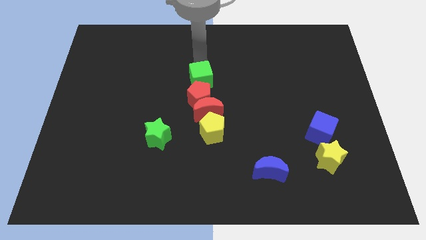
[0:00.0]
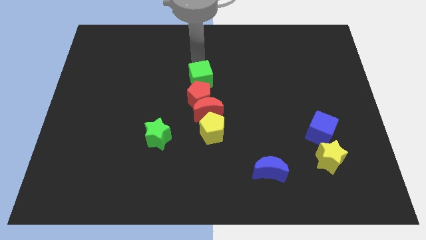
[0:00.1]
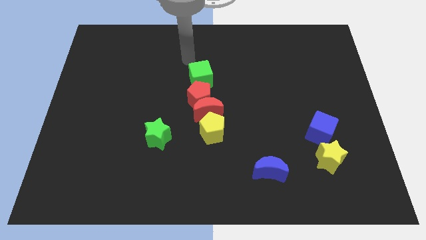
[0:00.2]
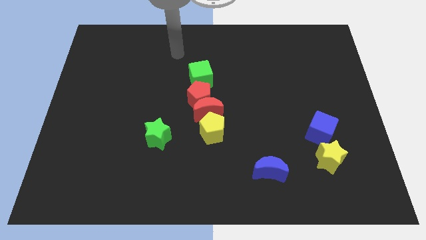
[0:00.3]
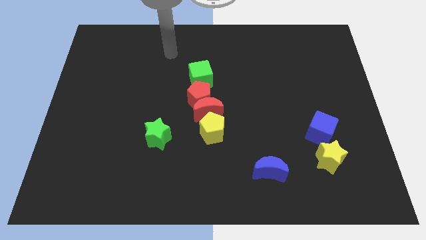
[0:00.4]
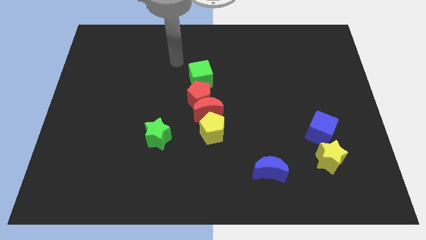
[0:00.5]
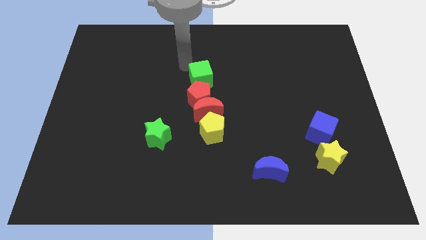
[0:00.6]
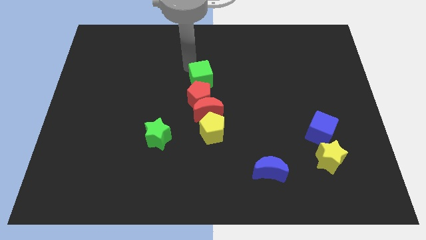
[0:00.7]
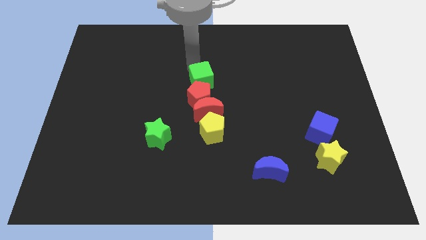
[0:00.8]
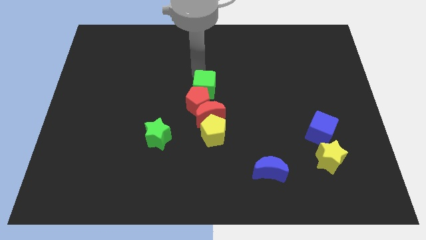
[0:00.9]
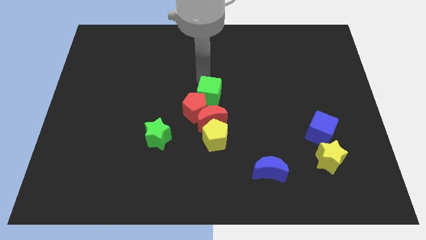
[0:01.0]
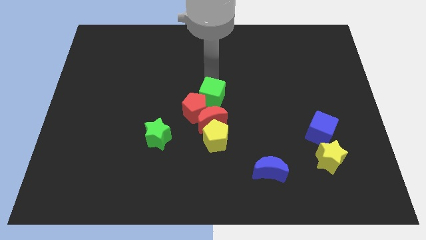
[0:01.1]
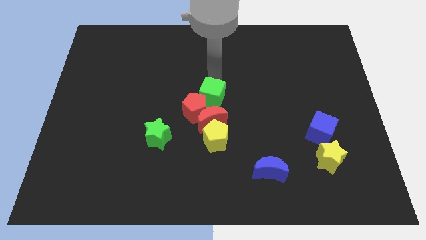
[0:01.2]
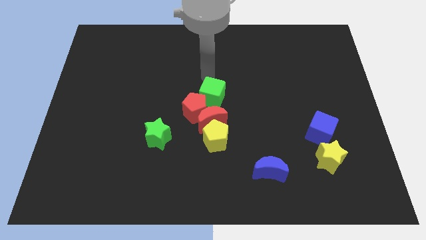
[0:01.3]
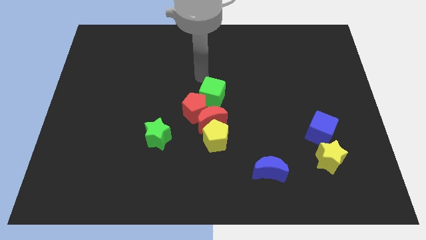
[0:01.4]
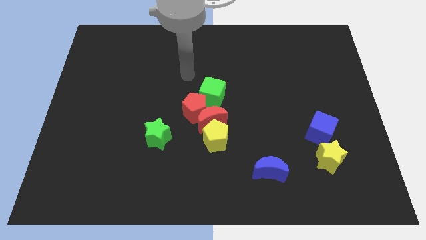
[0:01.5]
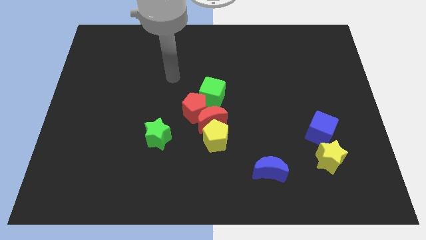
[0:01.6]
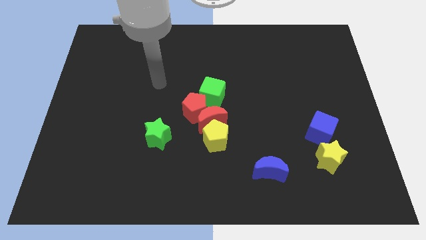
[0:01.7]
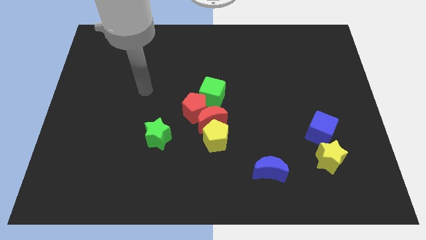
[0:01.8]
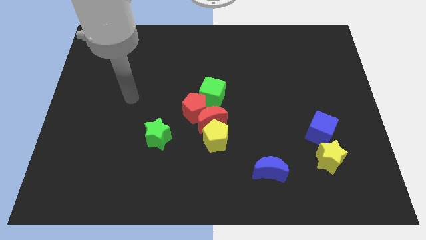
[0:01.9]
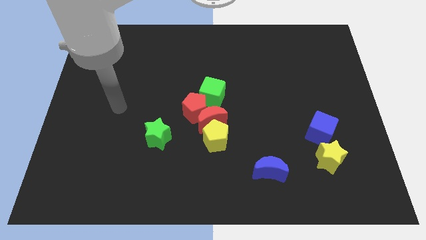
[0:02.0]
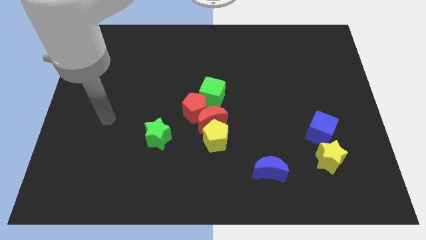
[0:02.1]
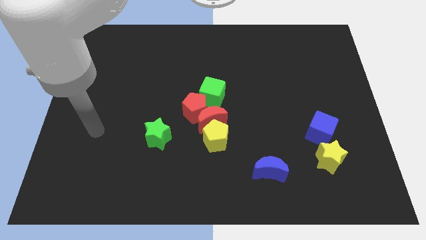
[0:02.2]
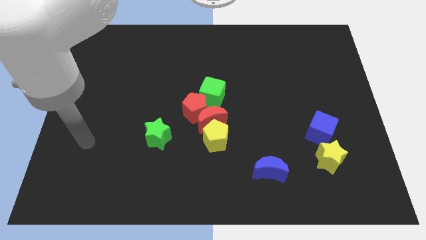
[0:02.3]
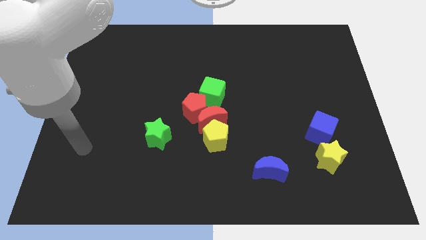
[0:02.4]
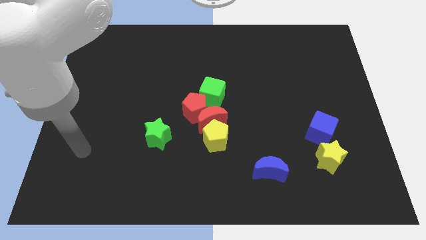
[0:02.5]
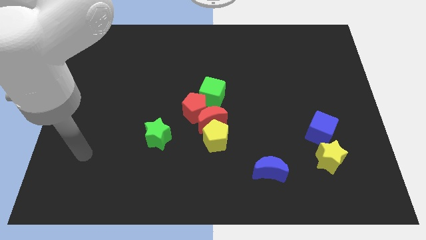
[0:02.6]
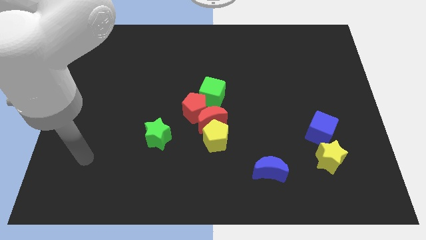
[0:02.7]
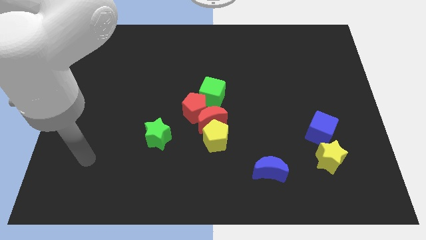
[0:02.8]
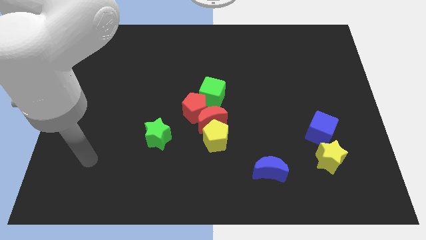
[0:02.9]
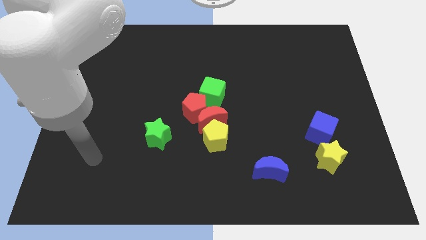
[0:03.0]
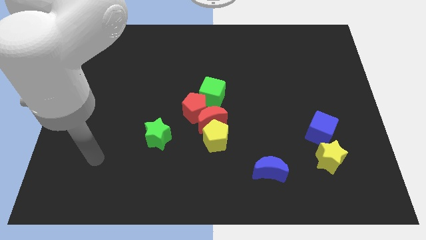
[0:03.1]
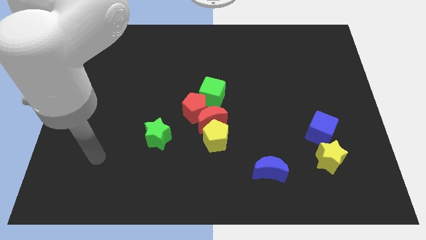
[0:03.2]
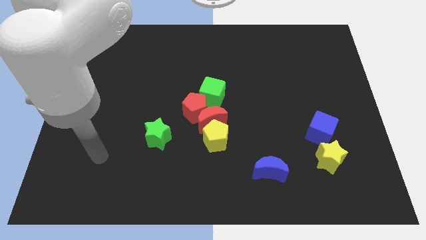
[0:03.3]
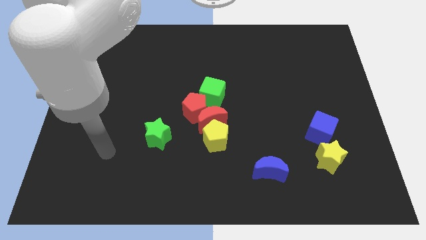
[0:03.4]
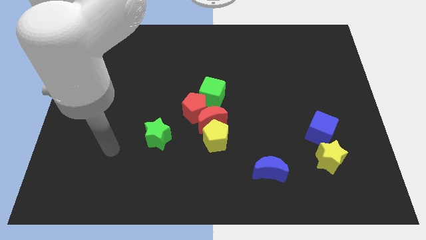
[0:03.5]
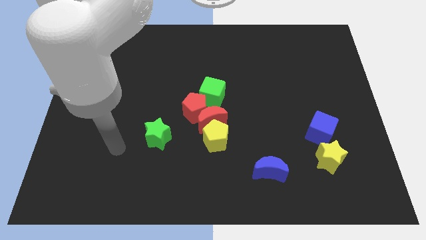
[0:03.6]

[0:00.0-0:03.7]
move the green cube close to the red pentagon at the center of the board

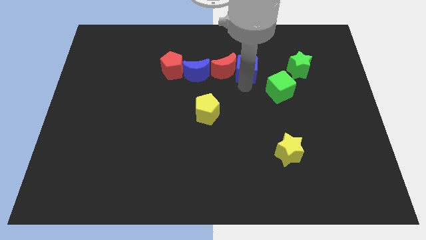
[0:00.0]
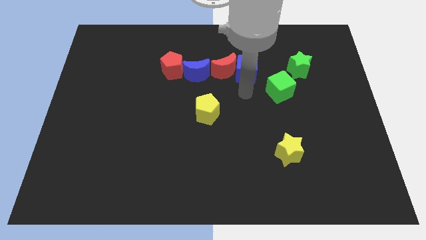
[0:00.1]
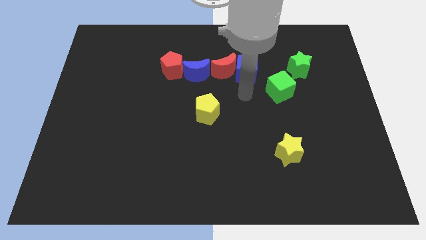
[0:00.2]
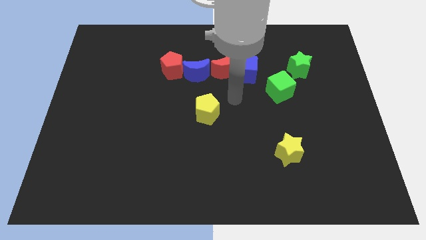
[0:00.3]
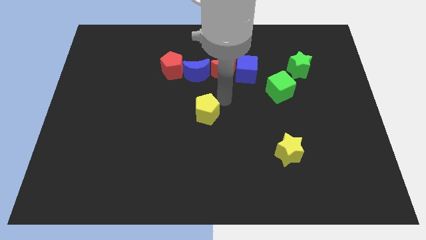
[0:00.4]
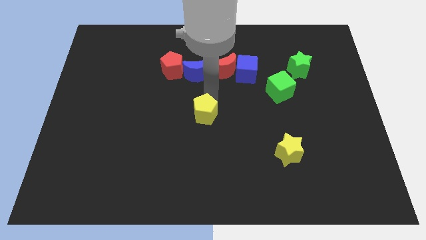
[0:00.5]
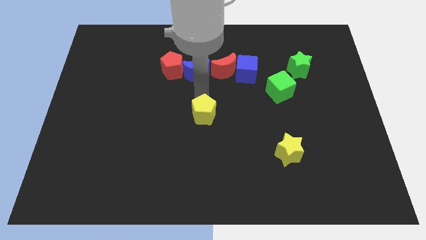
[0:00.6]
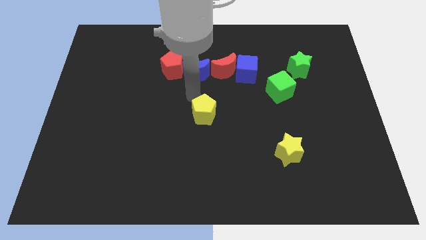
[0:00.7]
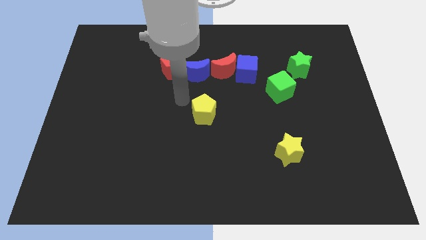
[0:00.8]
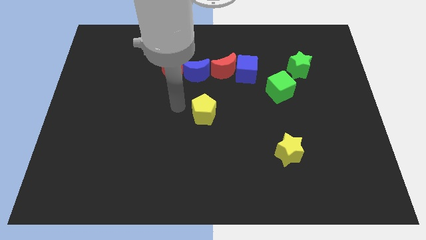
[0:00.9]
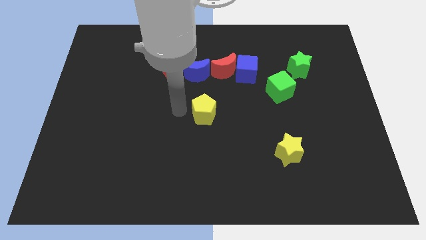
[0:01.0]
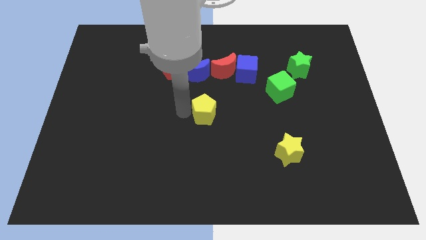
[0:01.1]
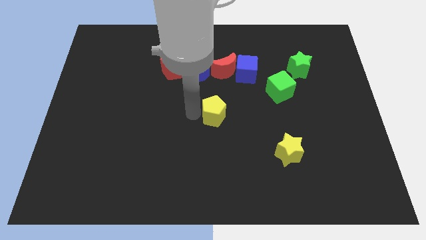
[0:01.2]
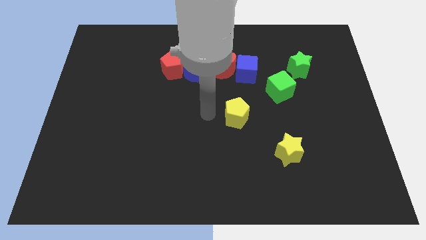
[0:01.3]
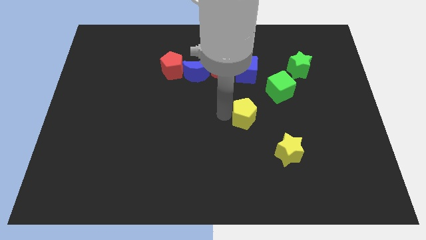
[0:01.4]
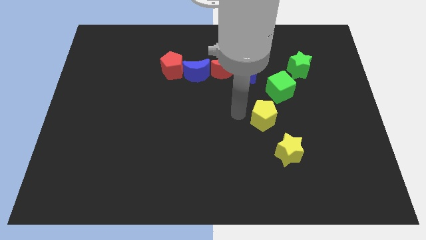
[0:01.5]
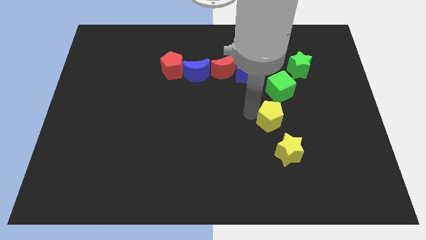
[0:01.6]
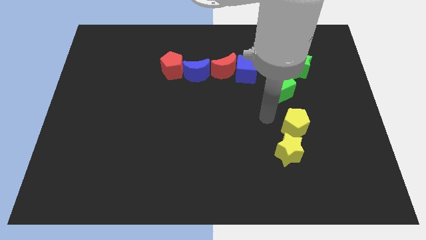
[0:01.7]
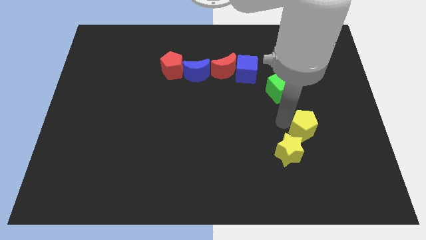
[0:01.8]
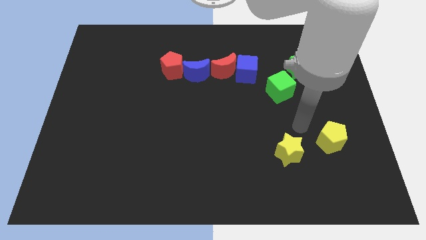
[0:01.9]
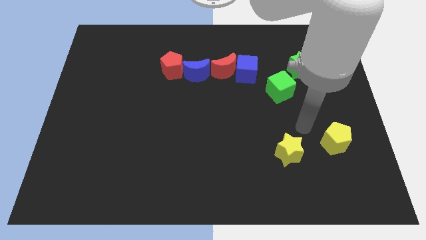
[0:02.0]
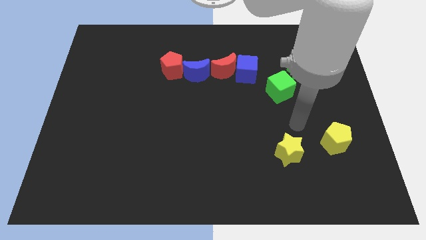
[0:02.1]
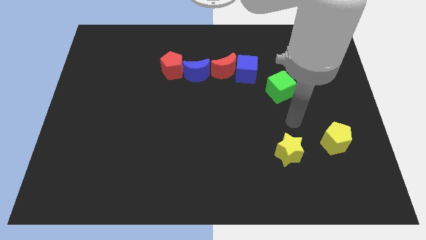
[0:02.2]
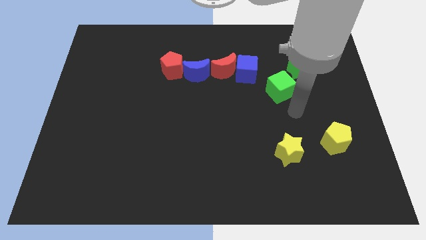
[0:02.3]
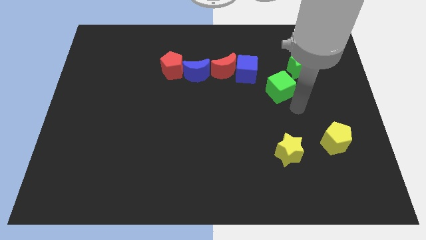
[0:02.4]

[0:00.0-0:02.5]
move yellow pentagon parallel right side of the yellow star

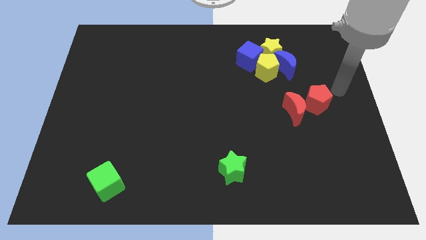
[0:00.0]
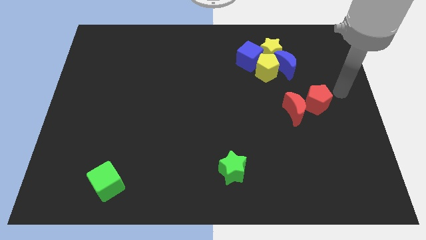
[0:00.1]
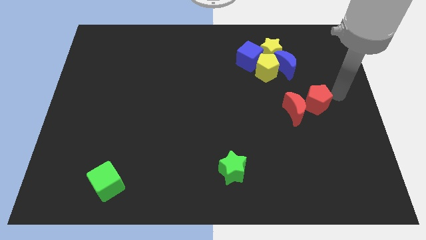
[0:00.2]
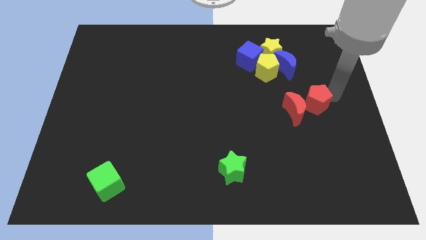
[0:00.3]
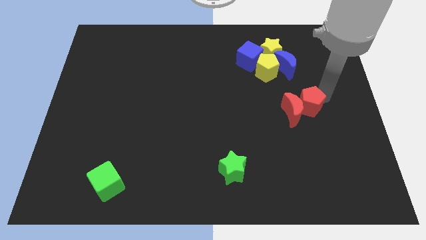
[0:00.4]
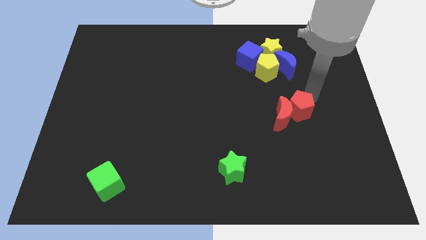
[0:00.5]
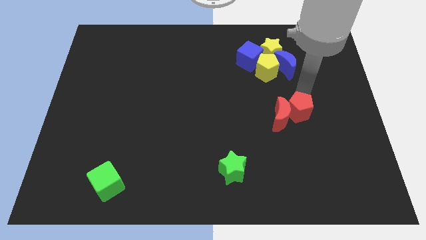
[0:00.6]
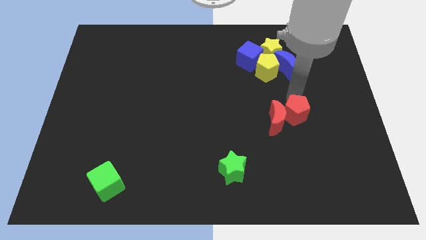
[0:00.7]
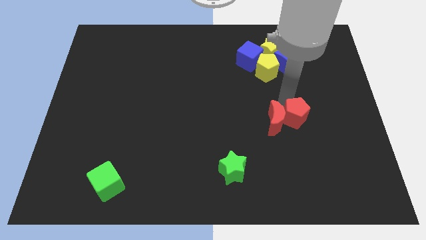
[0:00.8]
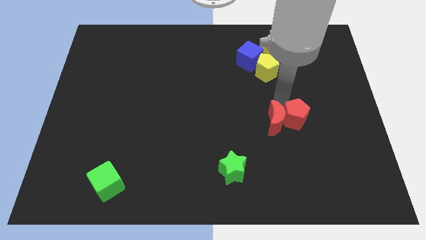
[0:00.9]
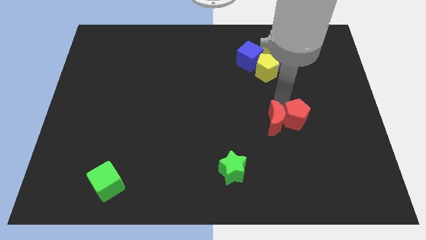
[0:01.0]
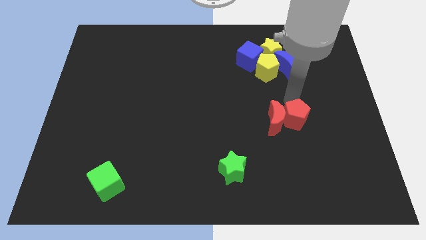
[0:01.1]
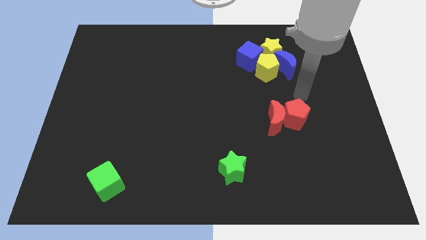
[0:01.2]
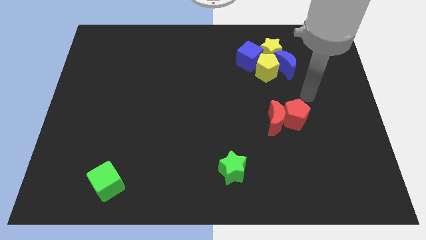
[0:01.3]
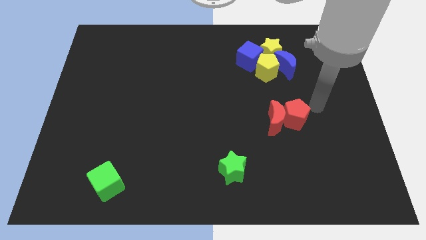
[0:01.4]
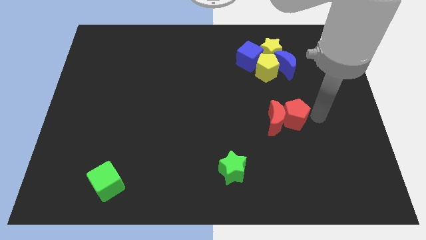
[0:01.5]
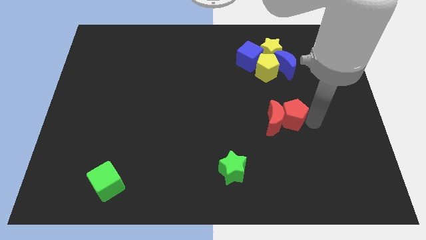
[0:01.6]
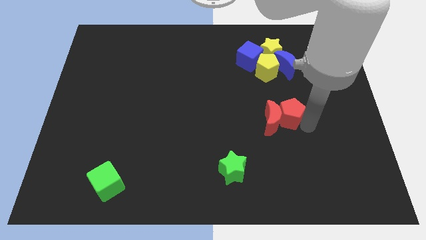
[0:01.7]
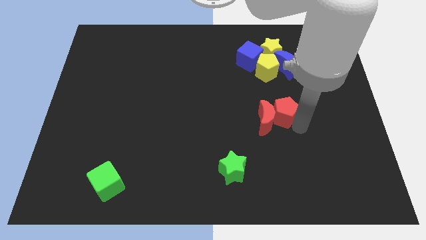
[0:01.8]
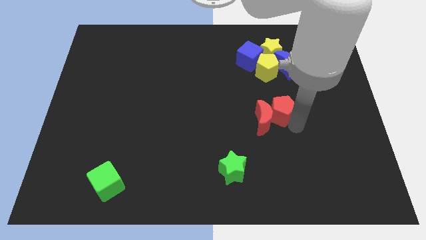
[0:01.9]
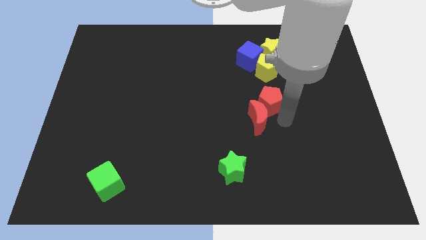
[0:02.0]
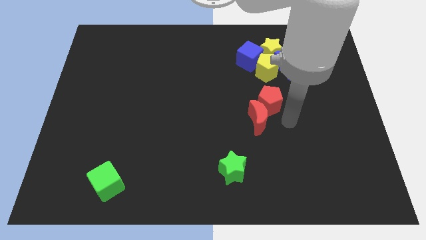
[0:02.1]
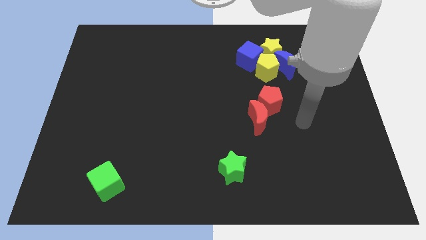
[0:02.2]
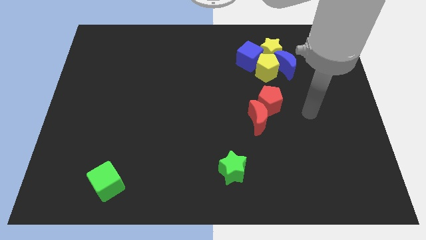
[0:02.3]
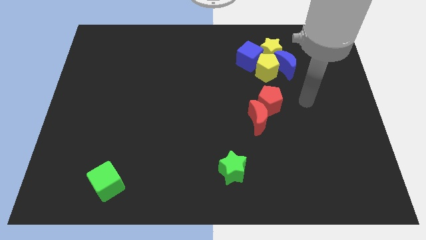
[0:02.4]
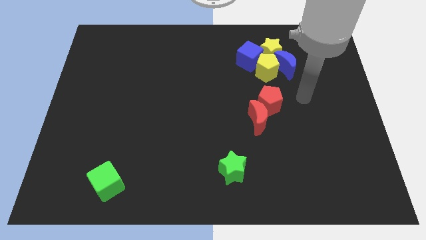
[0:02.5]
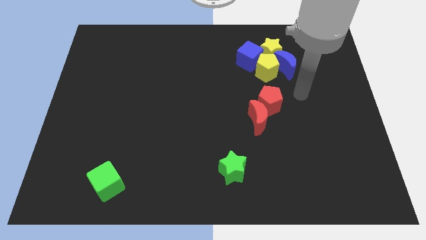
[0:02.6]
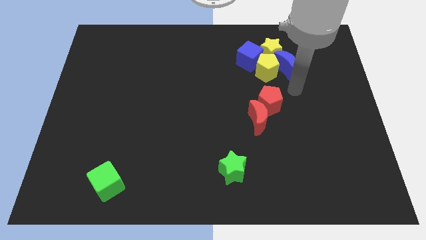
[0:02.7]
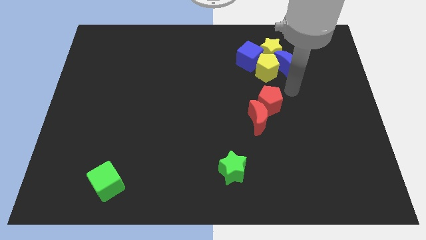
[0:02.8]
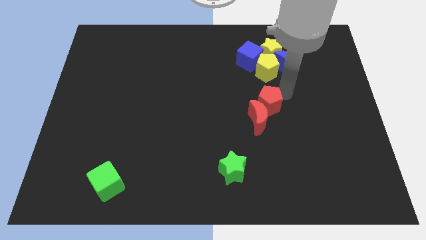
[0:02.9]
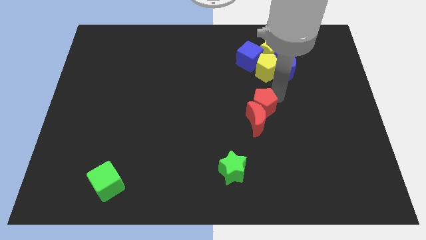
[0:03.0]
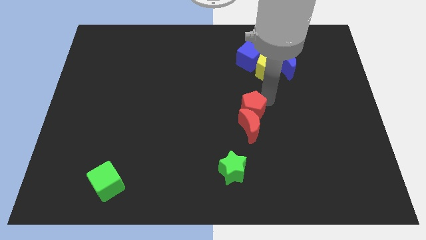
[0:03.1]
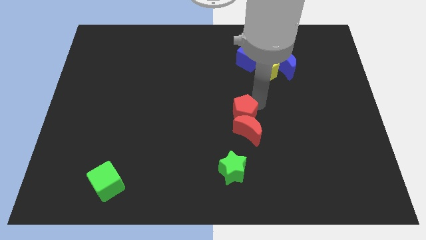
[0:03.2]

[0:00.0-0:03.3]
push the red moon and red pentagon to the center
